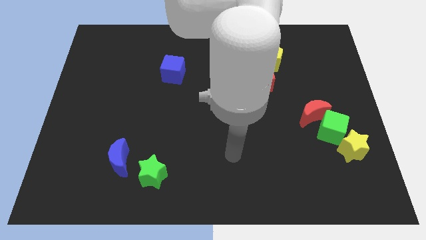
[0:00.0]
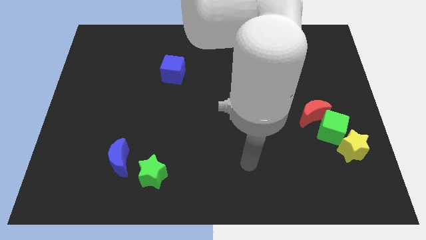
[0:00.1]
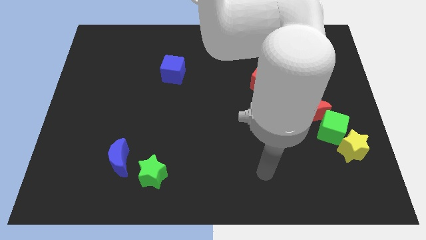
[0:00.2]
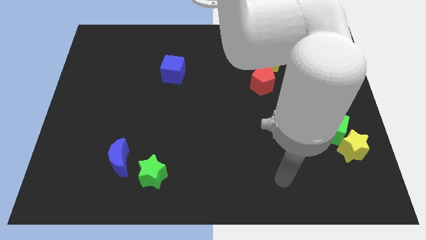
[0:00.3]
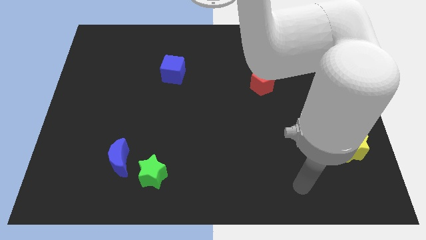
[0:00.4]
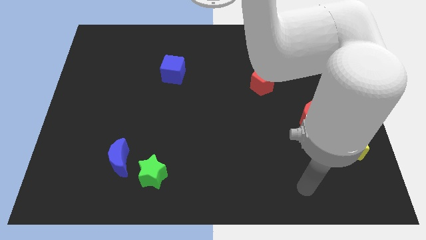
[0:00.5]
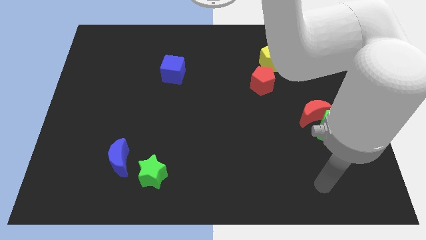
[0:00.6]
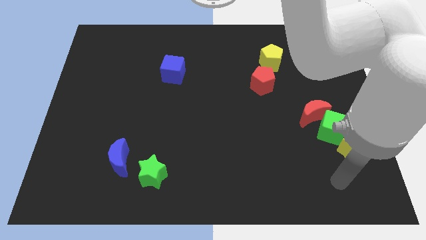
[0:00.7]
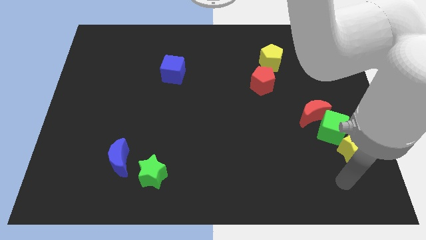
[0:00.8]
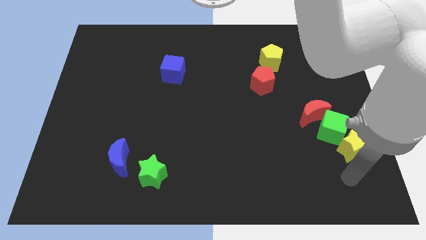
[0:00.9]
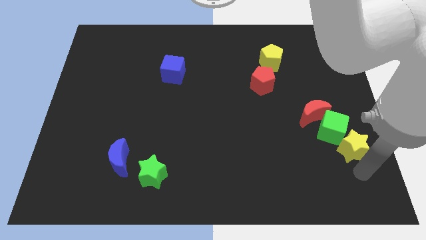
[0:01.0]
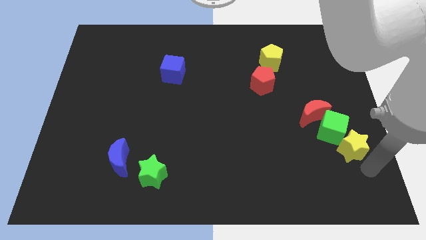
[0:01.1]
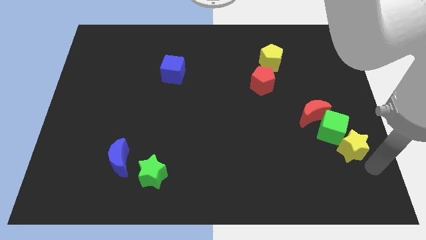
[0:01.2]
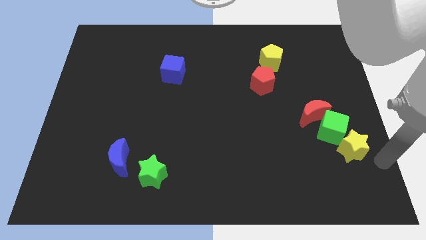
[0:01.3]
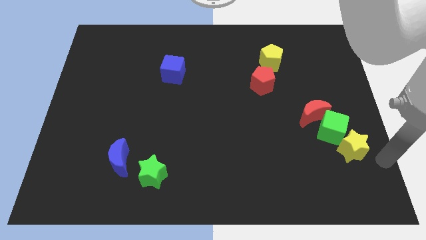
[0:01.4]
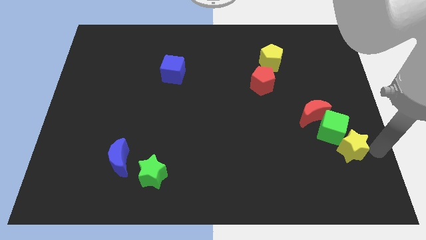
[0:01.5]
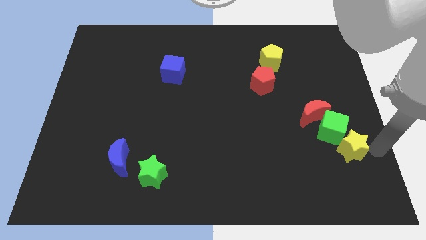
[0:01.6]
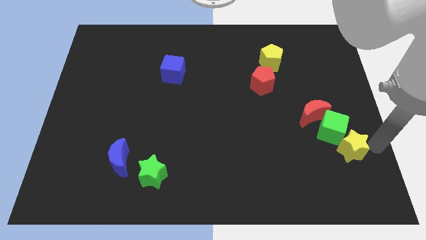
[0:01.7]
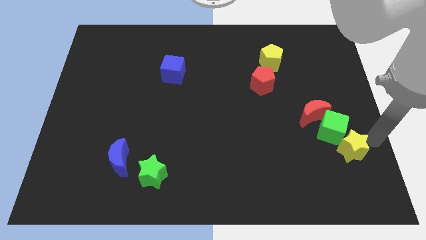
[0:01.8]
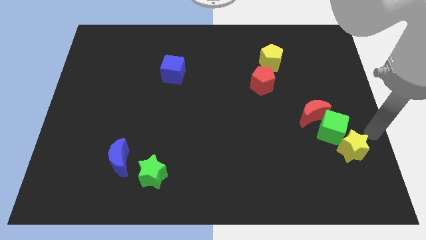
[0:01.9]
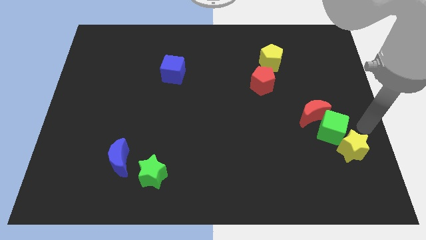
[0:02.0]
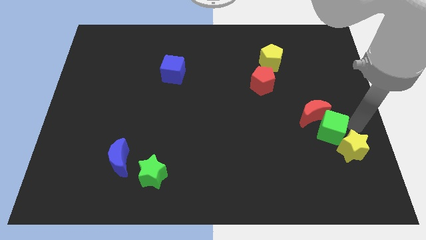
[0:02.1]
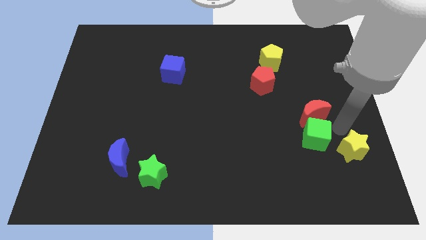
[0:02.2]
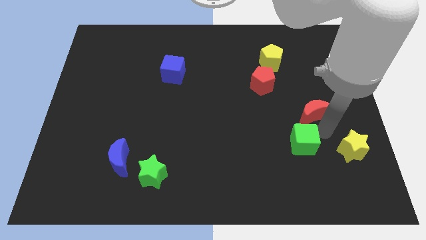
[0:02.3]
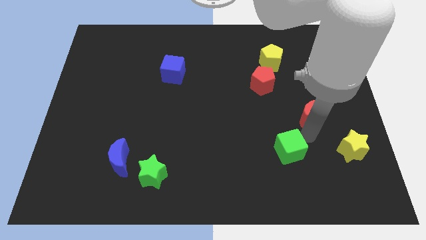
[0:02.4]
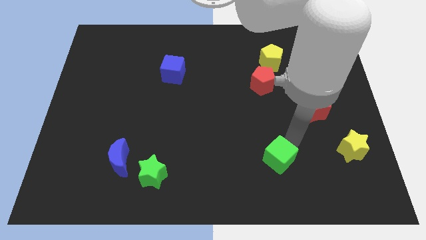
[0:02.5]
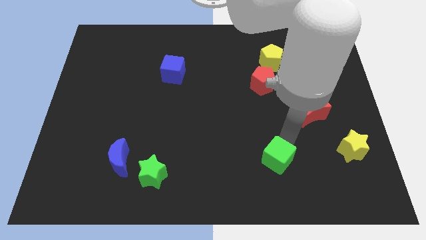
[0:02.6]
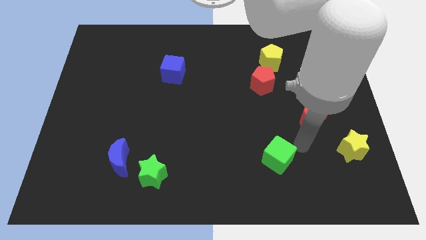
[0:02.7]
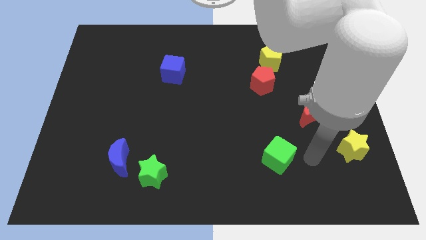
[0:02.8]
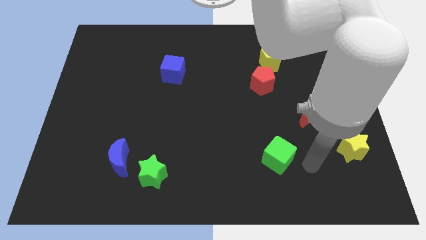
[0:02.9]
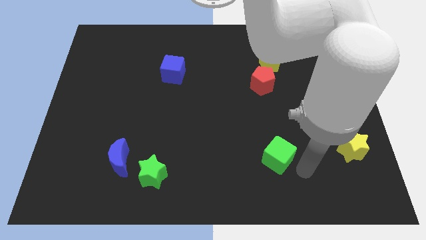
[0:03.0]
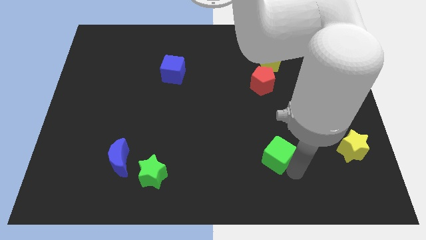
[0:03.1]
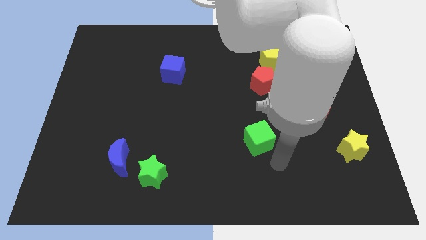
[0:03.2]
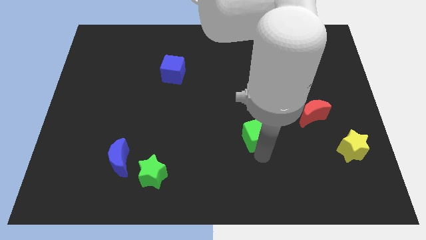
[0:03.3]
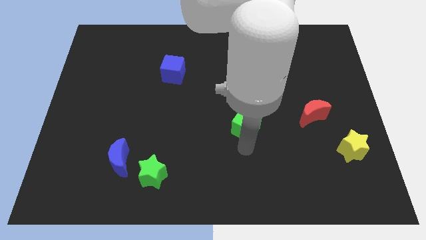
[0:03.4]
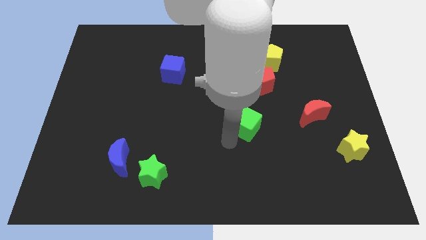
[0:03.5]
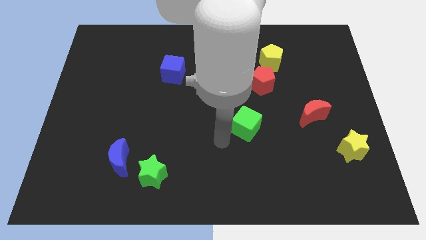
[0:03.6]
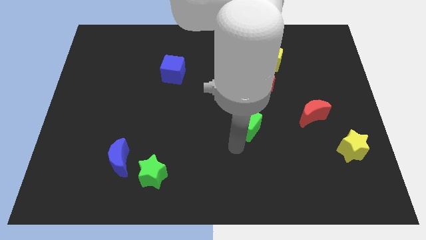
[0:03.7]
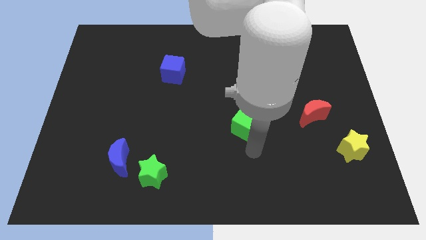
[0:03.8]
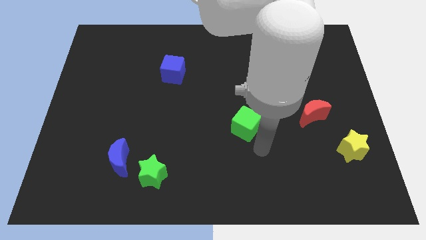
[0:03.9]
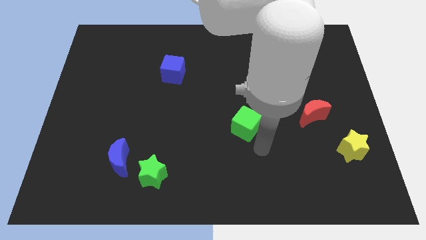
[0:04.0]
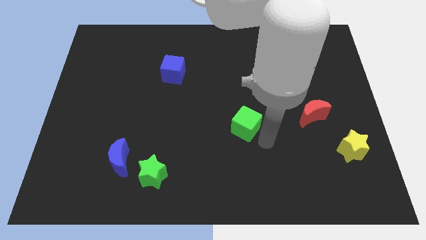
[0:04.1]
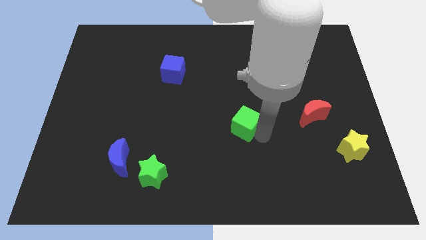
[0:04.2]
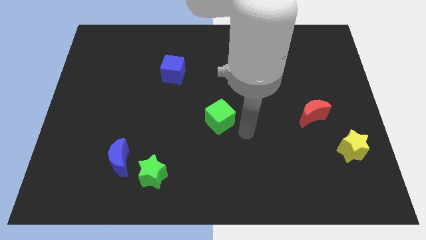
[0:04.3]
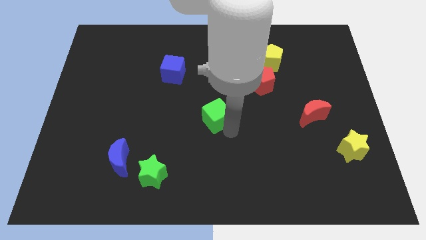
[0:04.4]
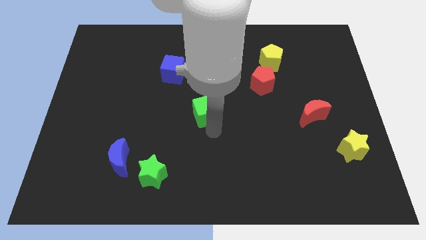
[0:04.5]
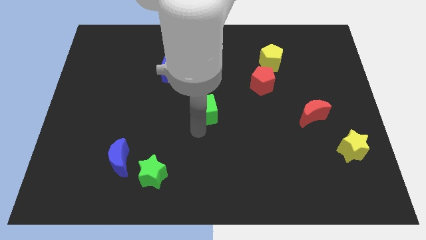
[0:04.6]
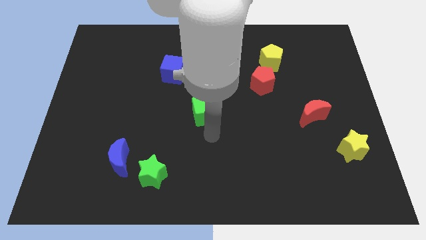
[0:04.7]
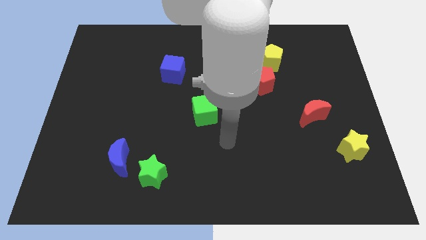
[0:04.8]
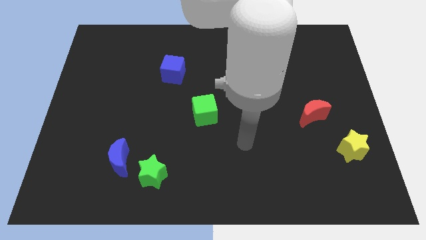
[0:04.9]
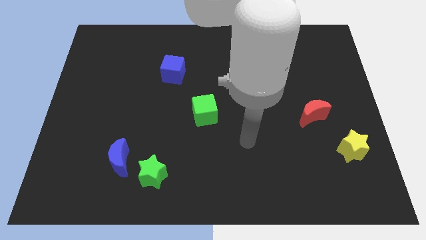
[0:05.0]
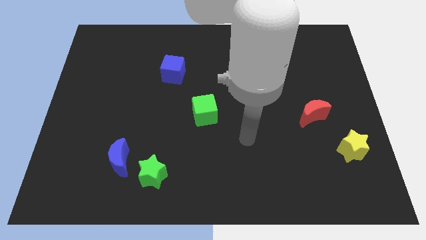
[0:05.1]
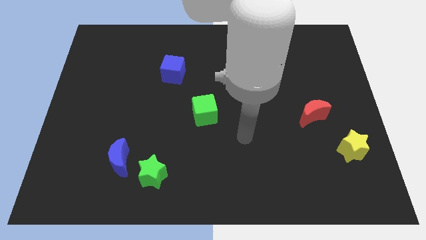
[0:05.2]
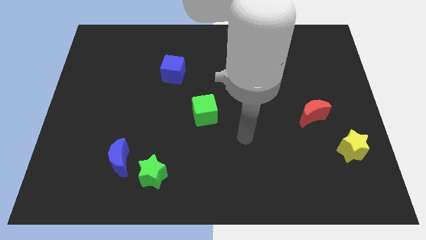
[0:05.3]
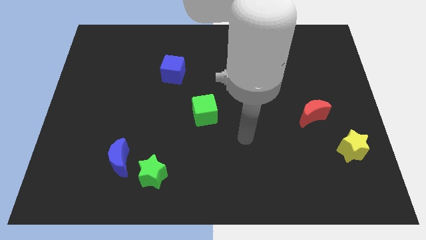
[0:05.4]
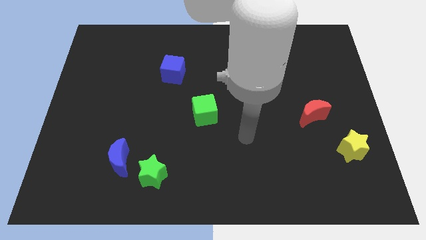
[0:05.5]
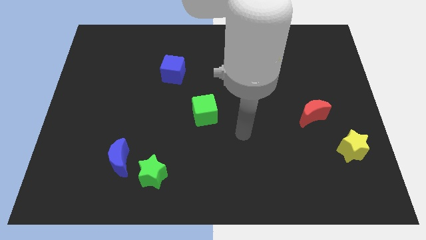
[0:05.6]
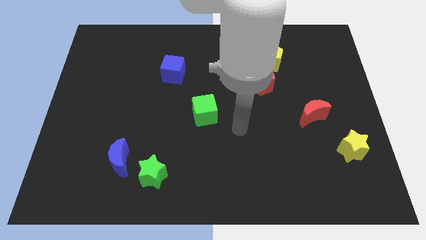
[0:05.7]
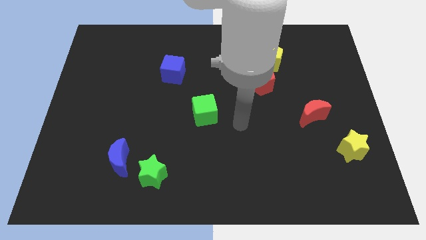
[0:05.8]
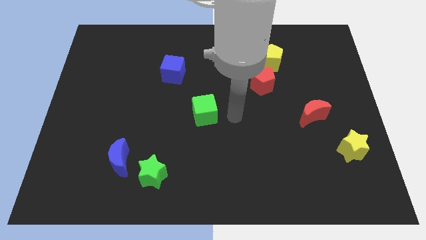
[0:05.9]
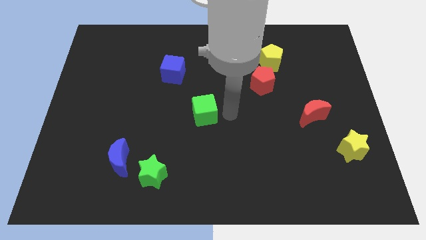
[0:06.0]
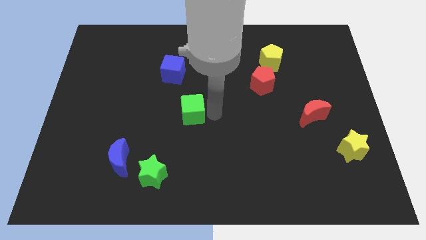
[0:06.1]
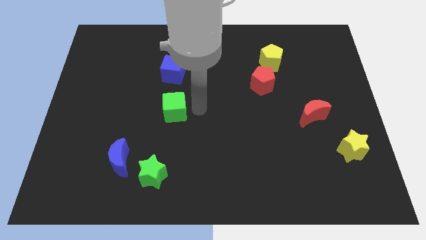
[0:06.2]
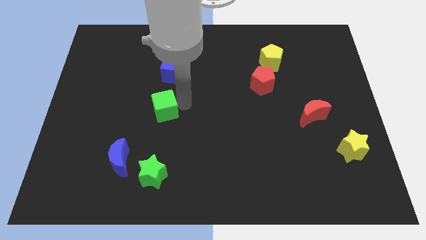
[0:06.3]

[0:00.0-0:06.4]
place the green cube in between blue cube and green star

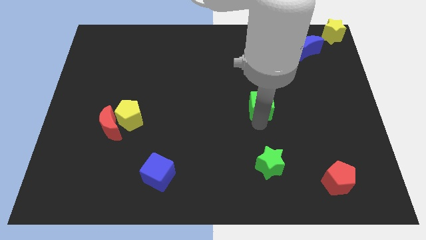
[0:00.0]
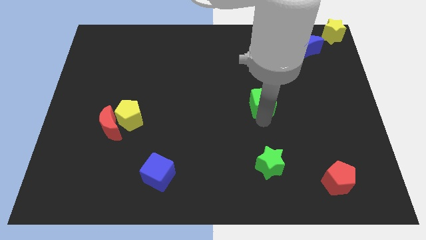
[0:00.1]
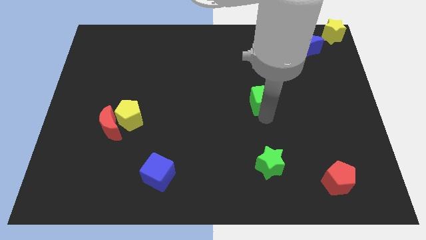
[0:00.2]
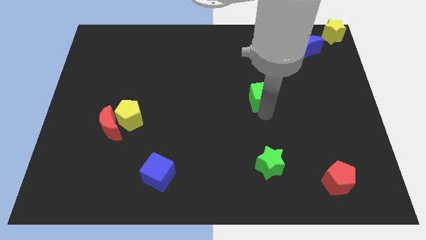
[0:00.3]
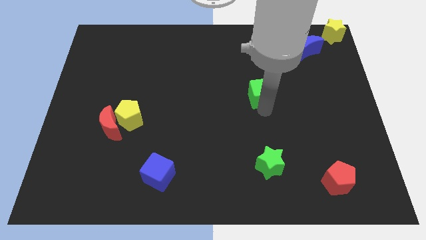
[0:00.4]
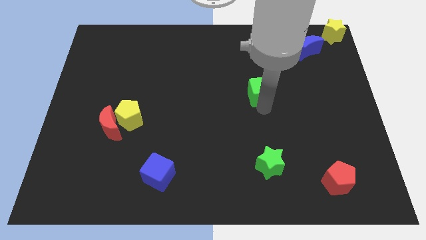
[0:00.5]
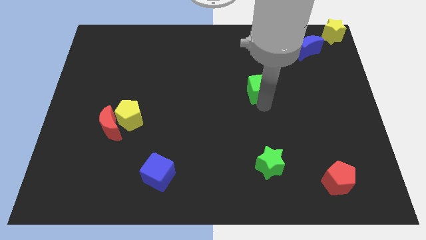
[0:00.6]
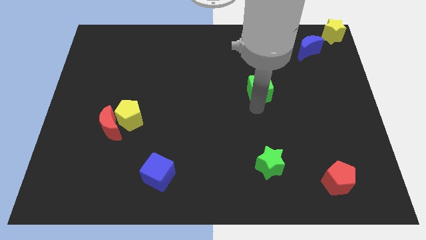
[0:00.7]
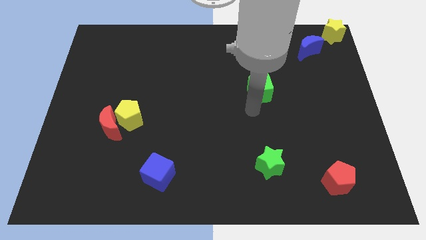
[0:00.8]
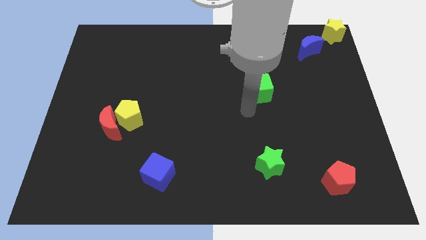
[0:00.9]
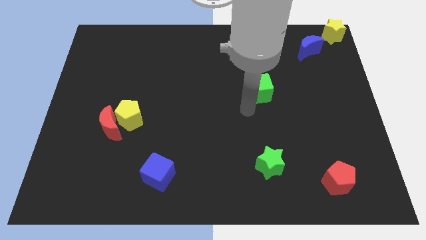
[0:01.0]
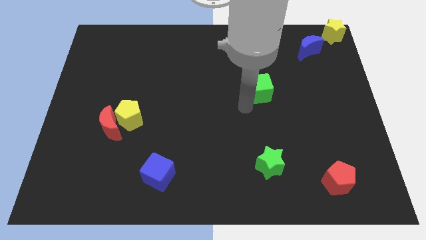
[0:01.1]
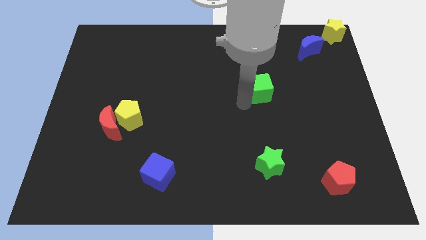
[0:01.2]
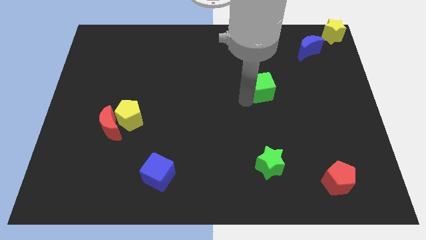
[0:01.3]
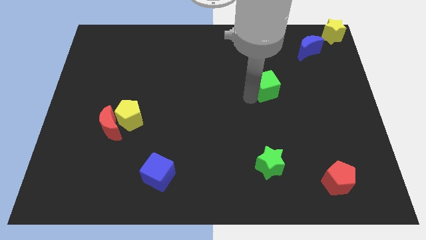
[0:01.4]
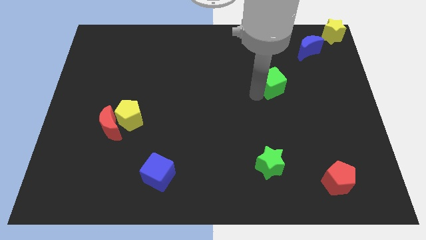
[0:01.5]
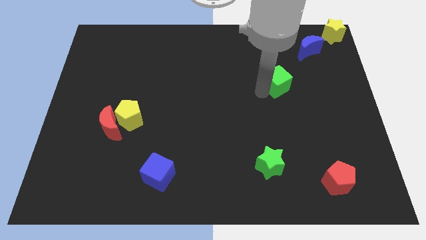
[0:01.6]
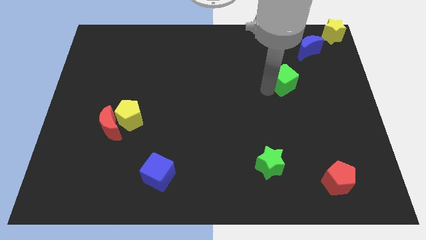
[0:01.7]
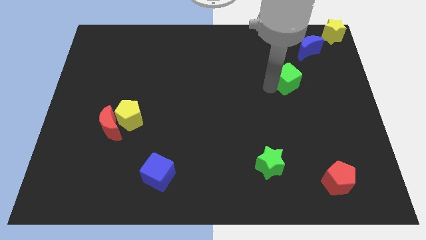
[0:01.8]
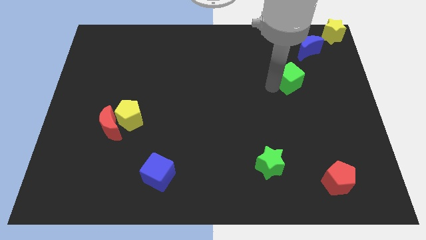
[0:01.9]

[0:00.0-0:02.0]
push the green cube towards the blue crescent

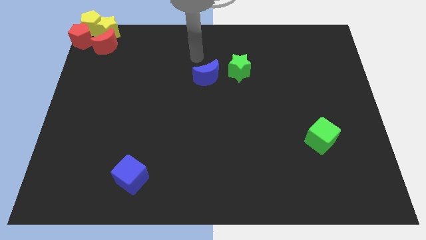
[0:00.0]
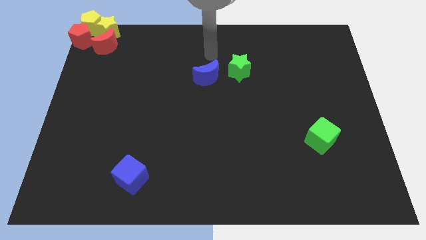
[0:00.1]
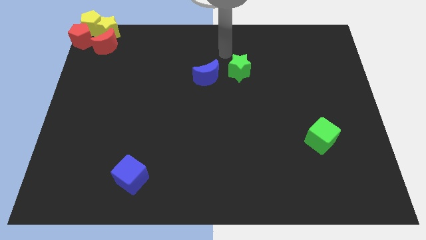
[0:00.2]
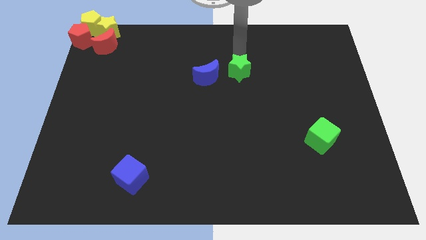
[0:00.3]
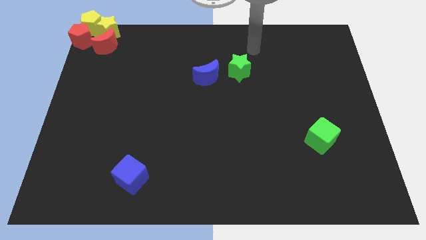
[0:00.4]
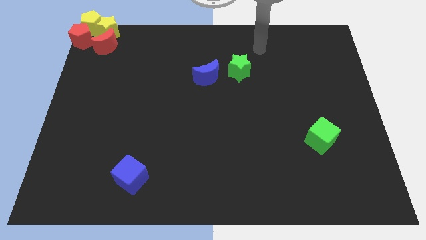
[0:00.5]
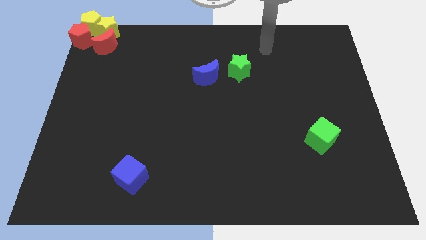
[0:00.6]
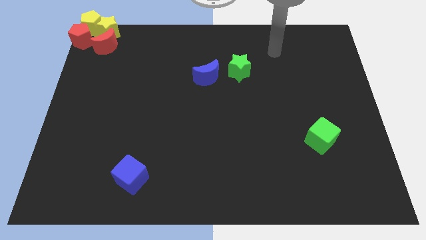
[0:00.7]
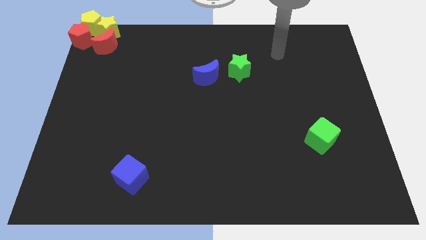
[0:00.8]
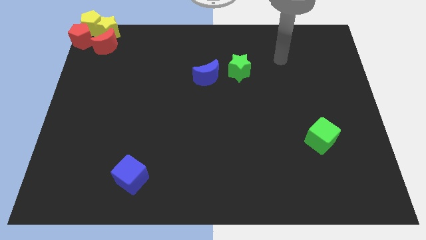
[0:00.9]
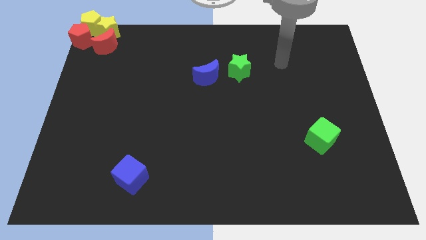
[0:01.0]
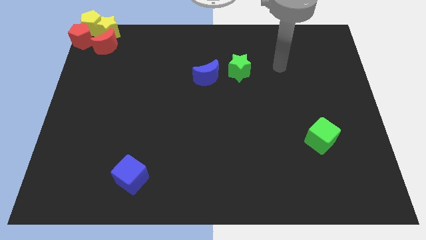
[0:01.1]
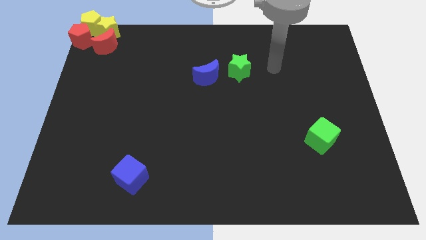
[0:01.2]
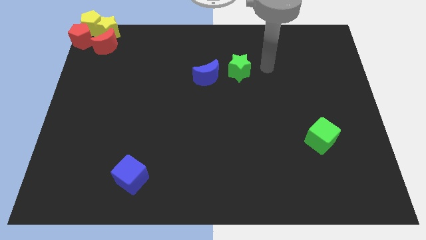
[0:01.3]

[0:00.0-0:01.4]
move your arm to the right of green star
